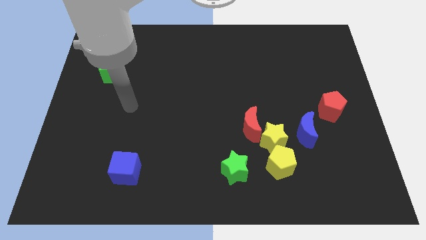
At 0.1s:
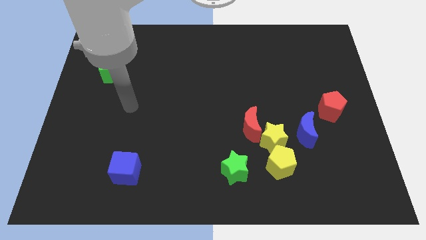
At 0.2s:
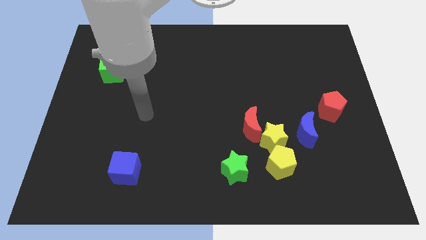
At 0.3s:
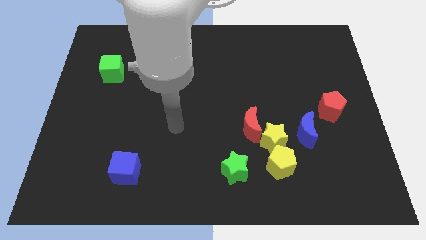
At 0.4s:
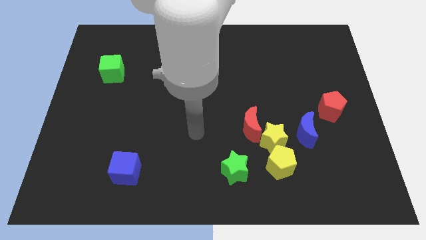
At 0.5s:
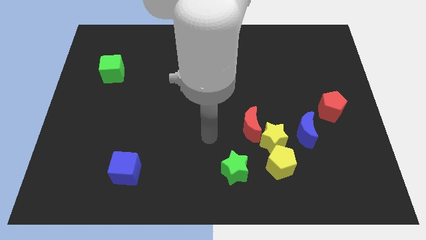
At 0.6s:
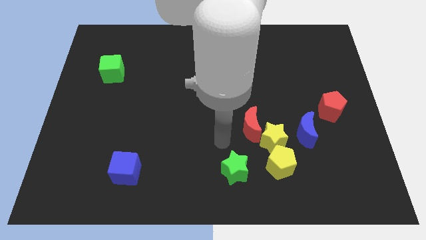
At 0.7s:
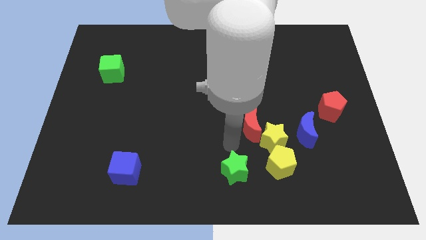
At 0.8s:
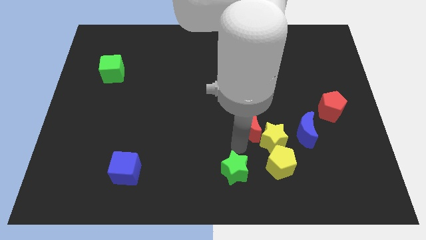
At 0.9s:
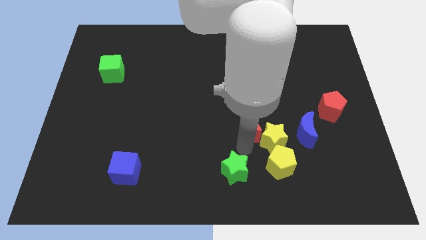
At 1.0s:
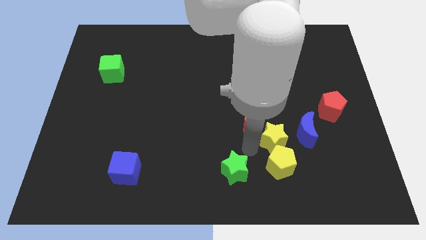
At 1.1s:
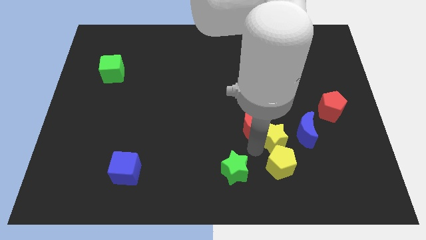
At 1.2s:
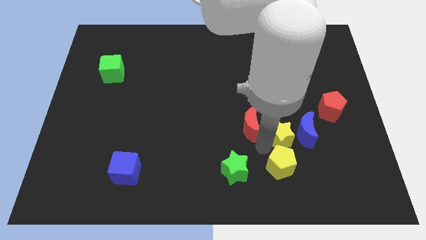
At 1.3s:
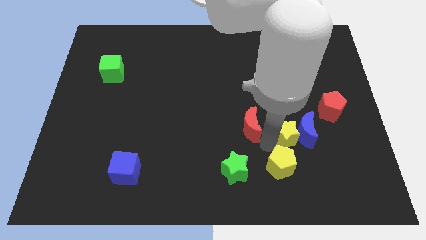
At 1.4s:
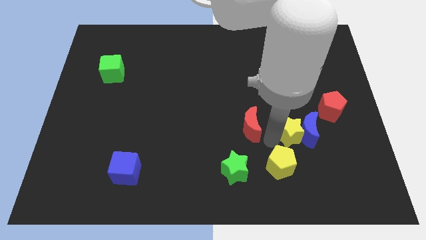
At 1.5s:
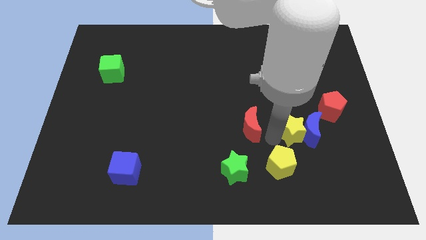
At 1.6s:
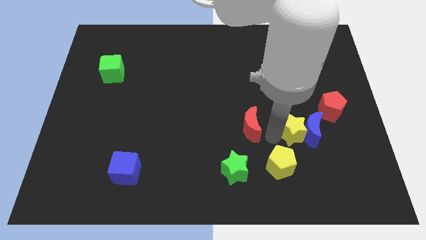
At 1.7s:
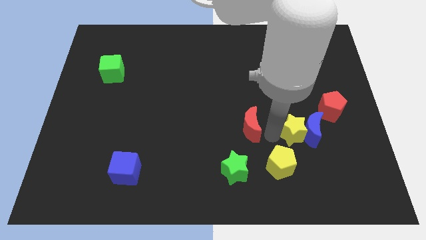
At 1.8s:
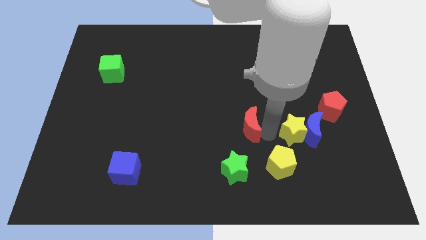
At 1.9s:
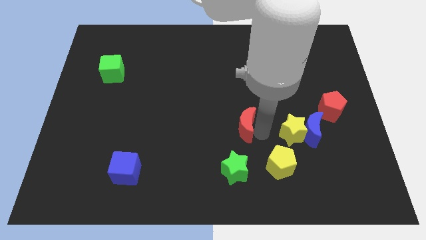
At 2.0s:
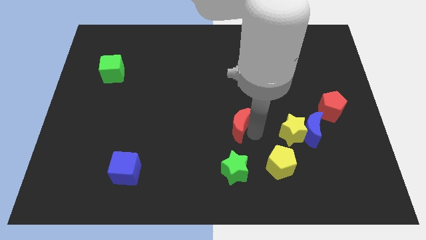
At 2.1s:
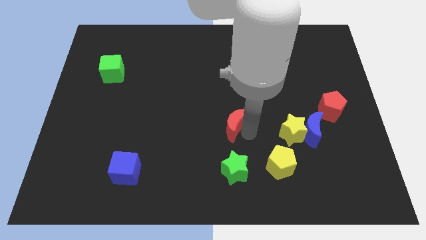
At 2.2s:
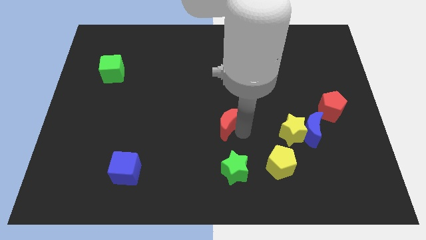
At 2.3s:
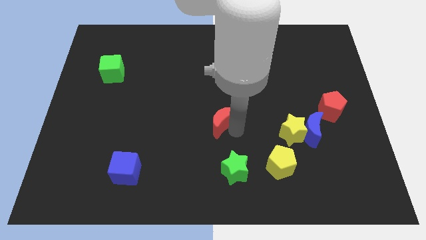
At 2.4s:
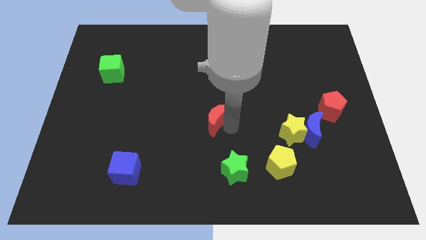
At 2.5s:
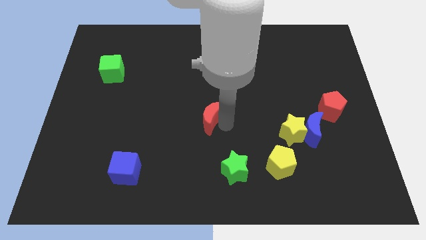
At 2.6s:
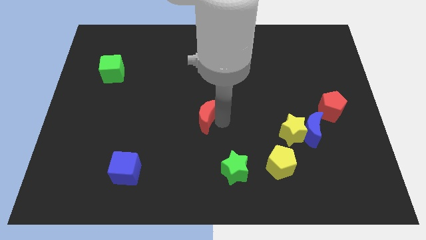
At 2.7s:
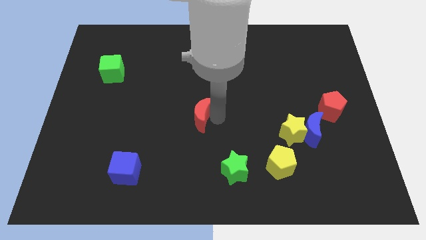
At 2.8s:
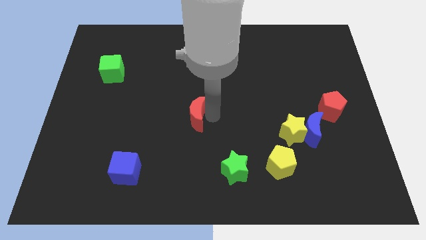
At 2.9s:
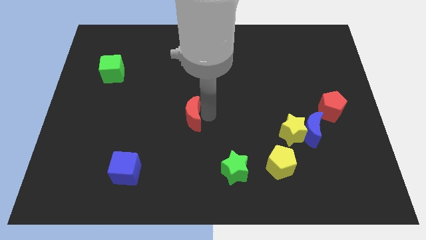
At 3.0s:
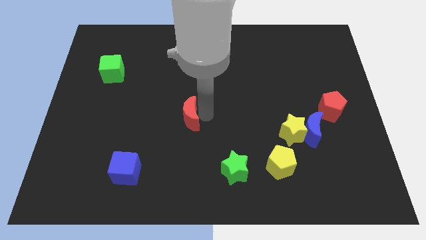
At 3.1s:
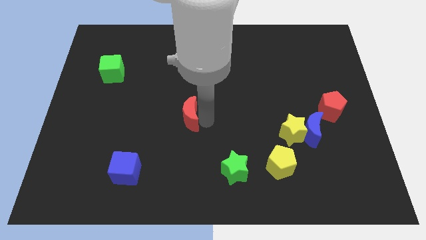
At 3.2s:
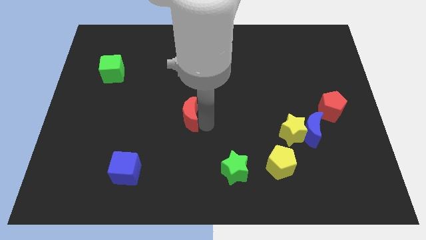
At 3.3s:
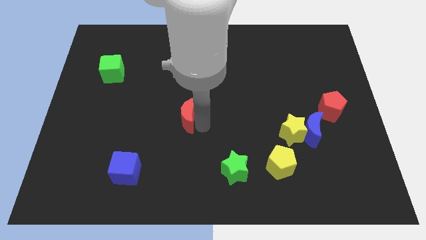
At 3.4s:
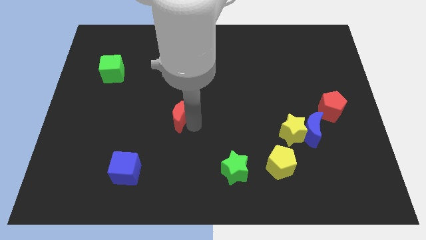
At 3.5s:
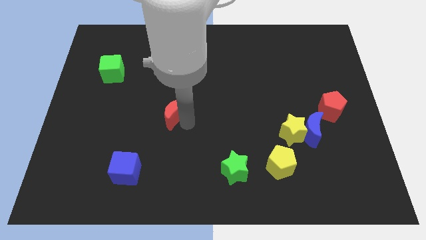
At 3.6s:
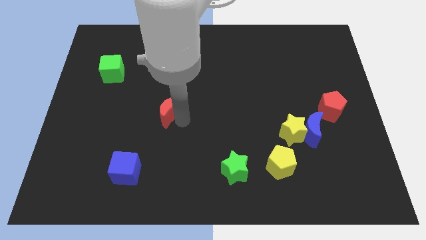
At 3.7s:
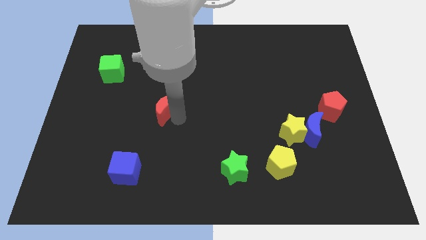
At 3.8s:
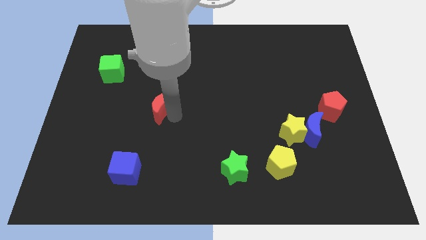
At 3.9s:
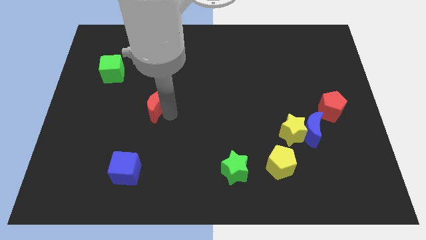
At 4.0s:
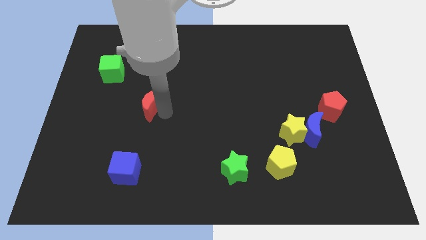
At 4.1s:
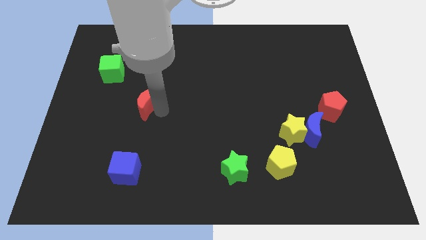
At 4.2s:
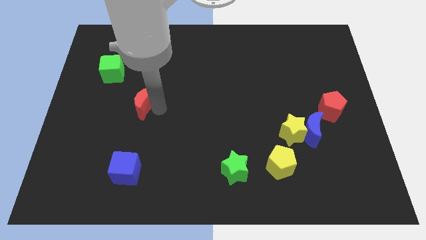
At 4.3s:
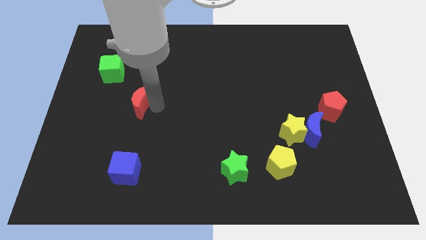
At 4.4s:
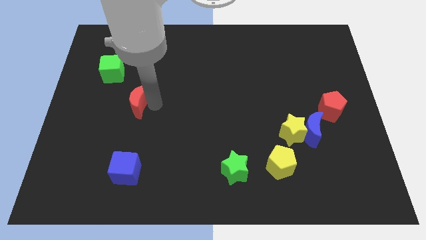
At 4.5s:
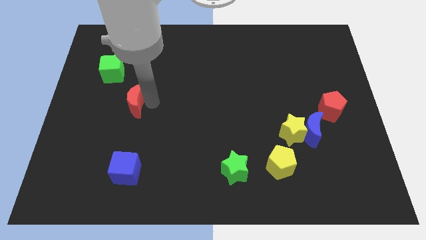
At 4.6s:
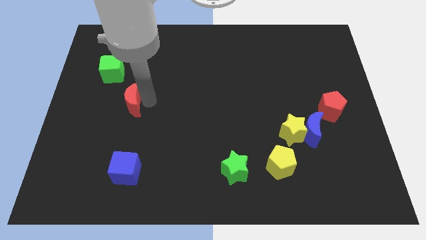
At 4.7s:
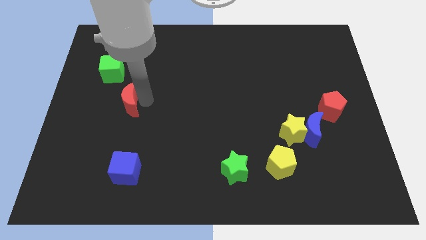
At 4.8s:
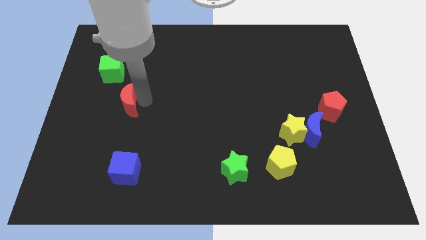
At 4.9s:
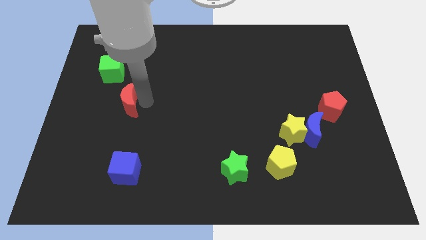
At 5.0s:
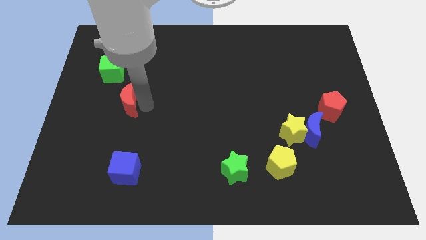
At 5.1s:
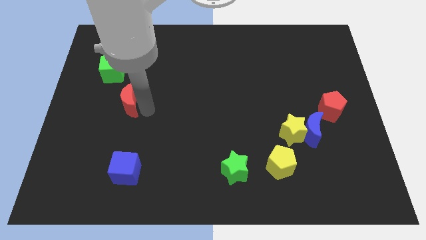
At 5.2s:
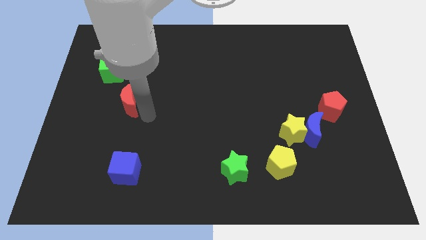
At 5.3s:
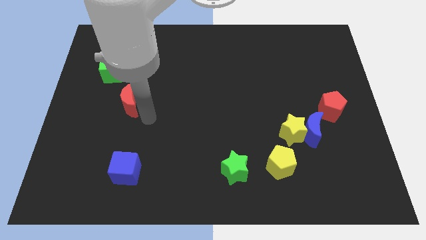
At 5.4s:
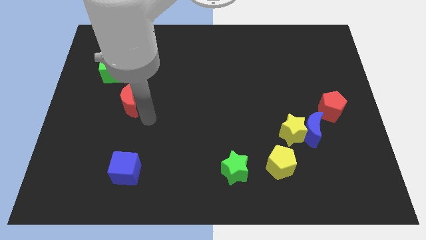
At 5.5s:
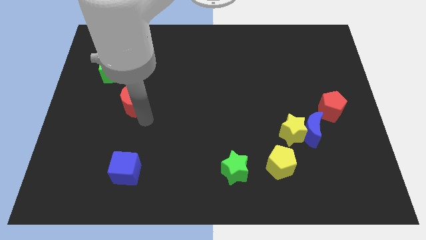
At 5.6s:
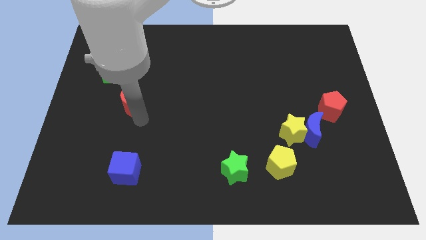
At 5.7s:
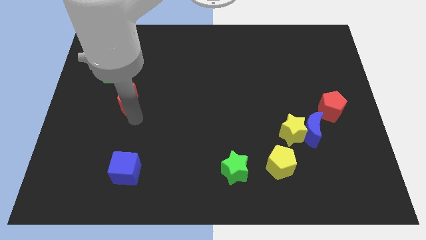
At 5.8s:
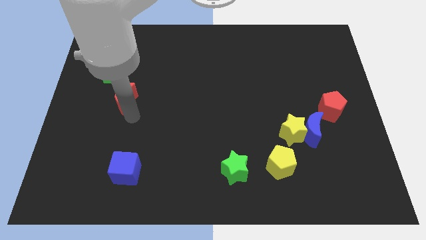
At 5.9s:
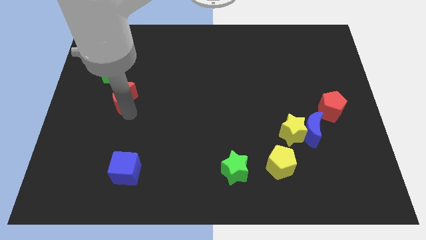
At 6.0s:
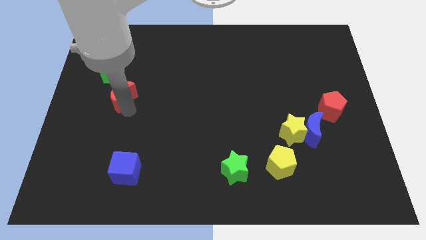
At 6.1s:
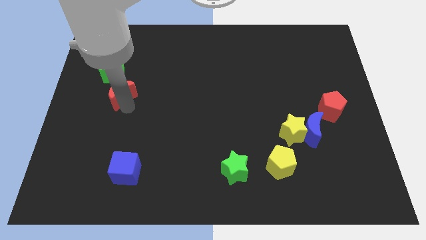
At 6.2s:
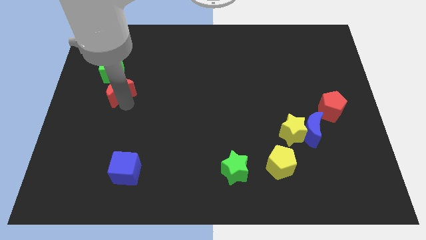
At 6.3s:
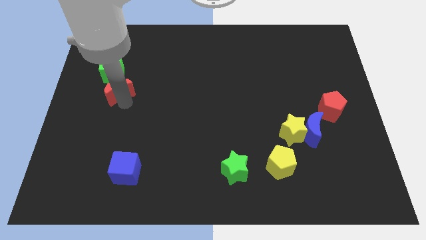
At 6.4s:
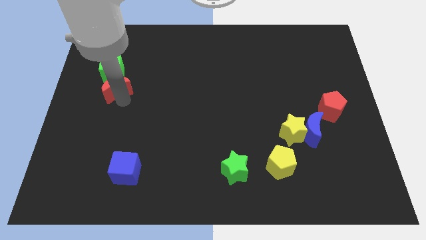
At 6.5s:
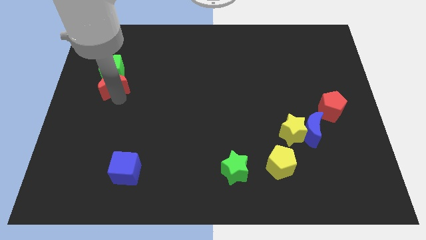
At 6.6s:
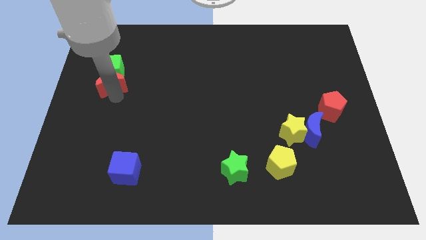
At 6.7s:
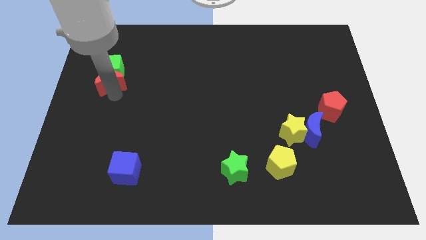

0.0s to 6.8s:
move the red moon towards the green cube

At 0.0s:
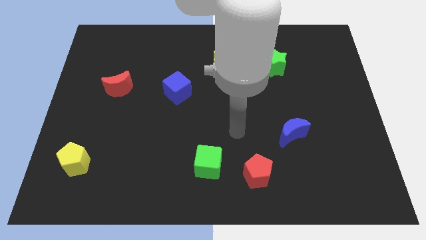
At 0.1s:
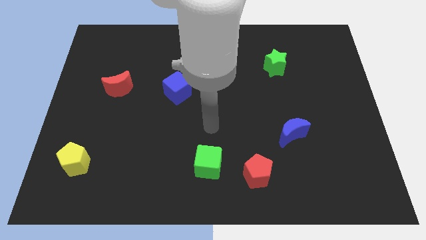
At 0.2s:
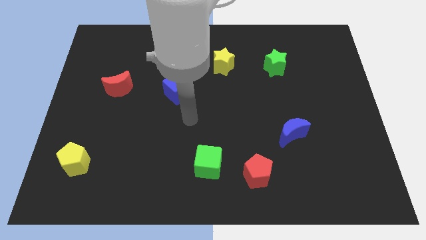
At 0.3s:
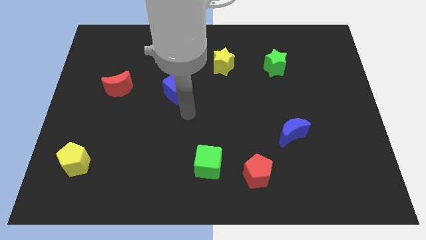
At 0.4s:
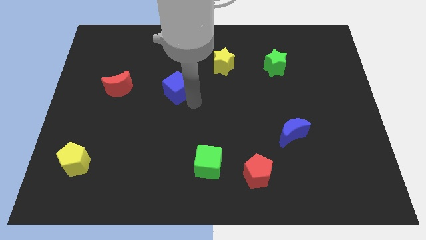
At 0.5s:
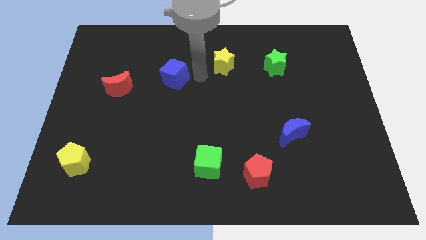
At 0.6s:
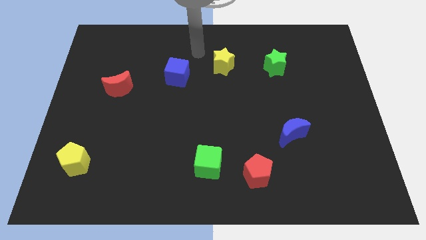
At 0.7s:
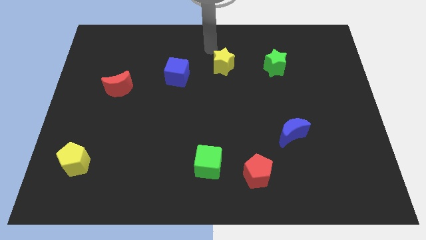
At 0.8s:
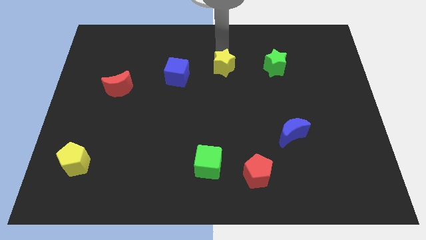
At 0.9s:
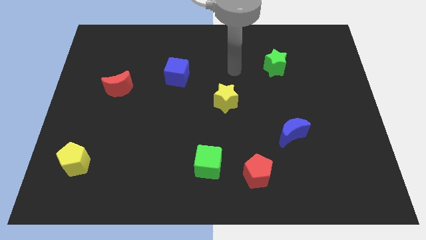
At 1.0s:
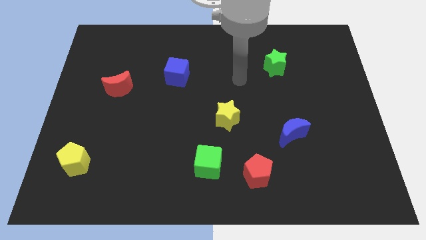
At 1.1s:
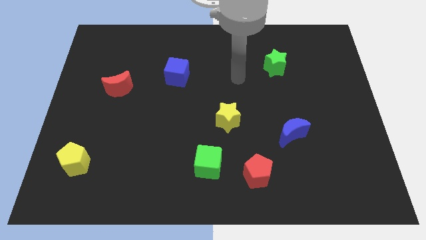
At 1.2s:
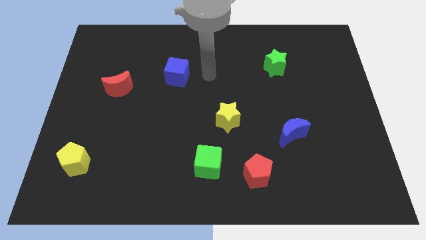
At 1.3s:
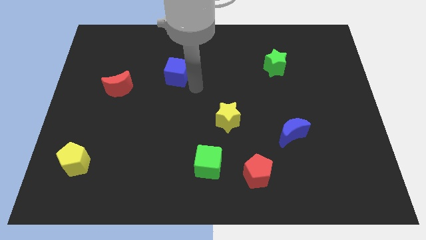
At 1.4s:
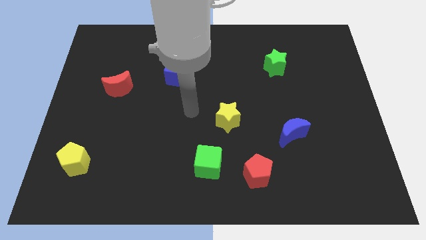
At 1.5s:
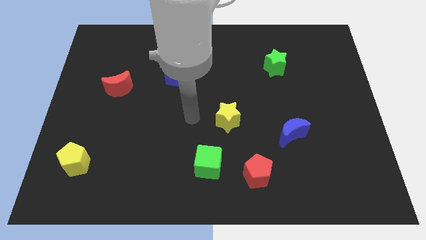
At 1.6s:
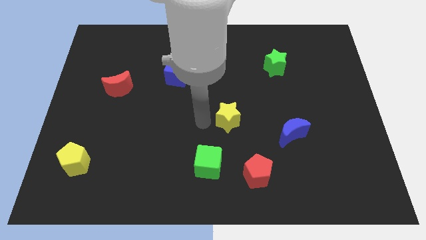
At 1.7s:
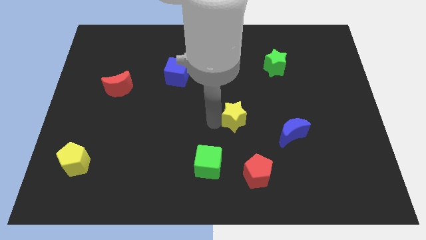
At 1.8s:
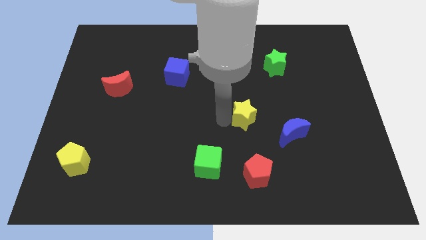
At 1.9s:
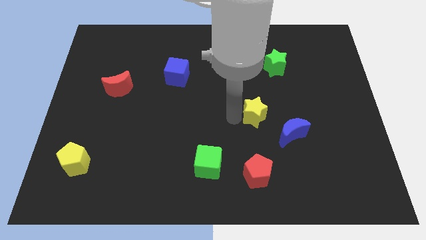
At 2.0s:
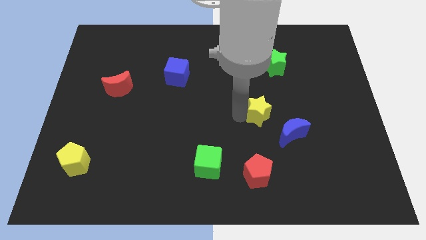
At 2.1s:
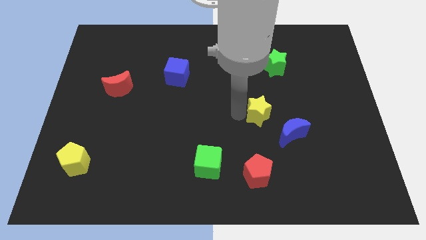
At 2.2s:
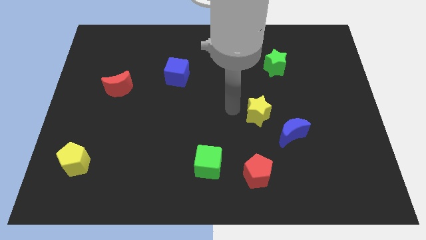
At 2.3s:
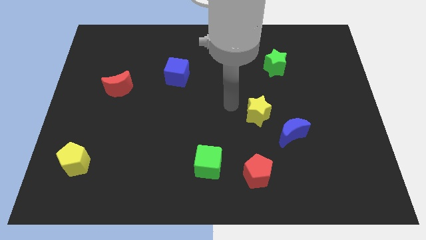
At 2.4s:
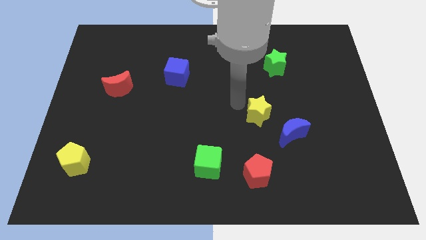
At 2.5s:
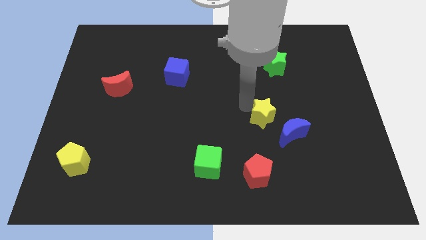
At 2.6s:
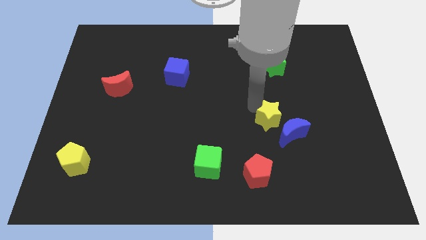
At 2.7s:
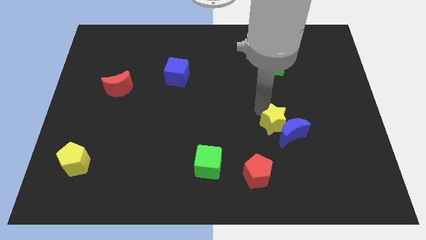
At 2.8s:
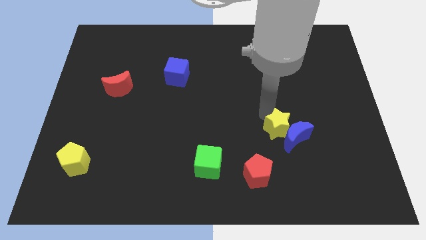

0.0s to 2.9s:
move the yellow star towards the blue moon
